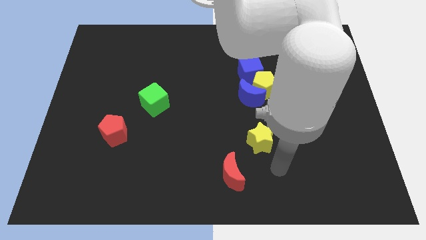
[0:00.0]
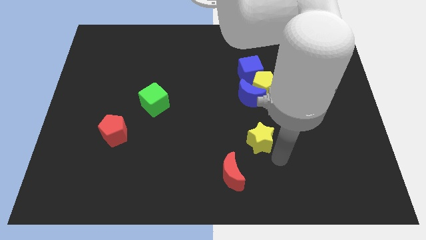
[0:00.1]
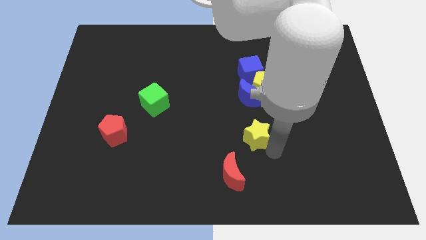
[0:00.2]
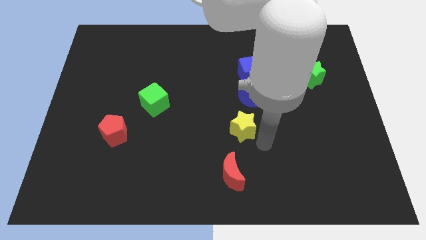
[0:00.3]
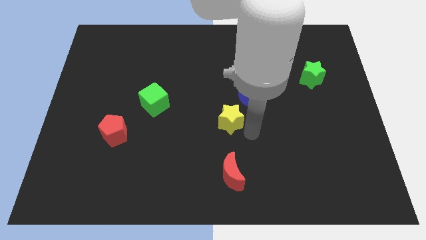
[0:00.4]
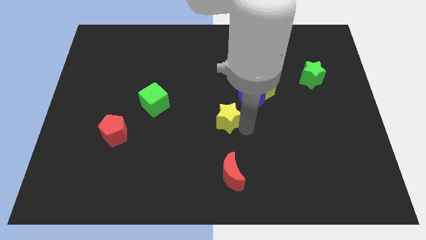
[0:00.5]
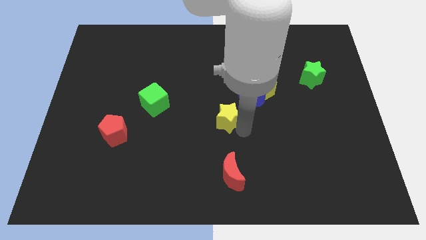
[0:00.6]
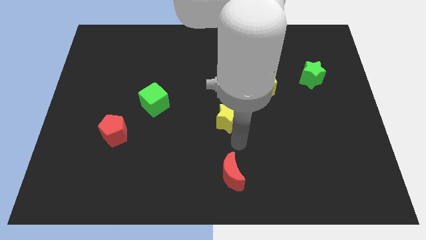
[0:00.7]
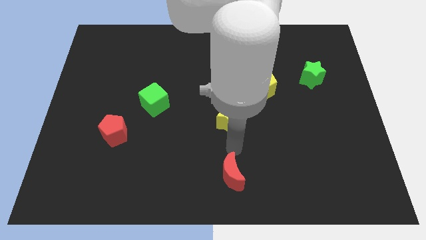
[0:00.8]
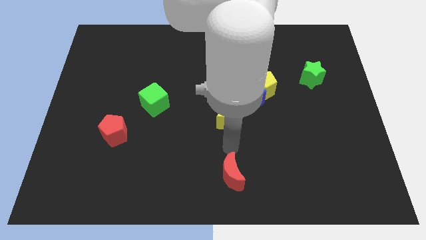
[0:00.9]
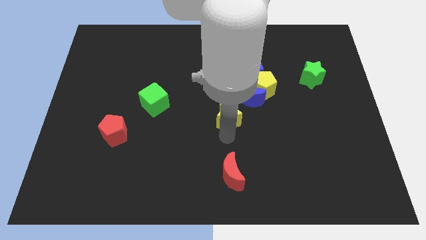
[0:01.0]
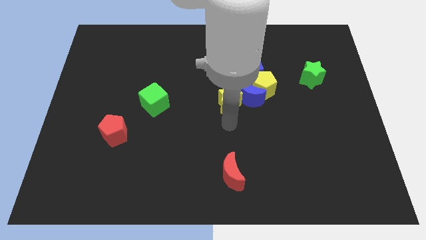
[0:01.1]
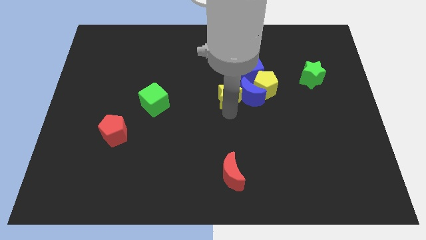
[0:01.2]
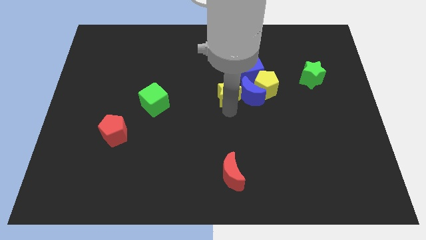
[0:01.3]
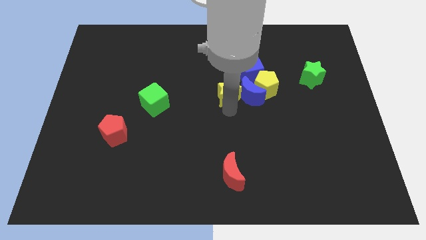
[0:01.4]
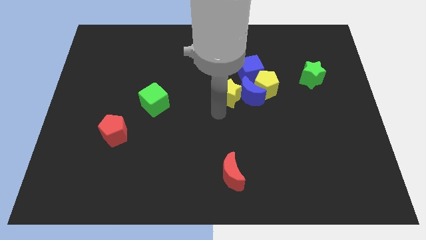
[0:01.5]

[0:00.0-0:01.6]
move the yellow star at the left of the blue moon

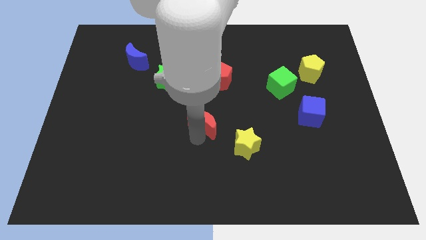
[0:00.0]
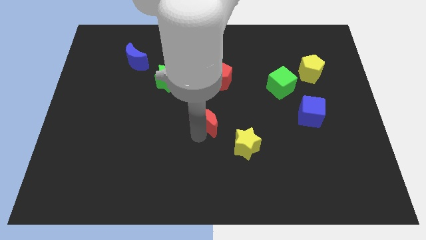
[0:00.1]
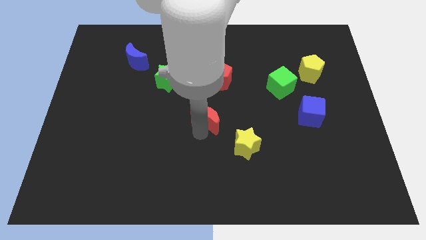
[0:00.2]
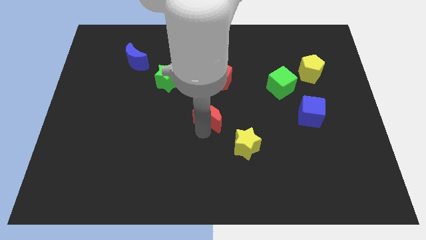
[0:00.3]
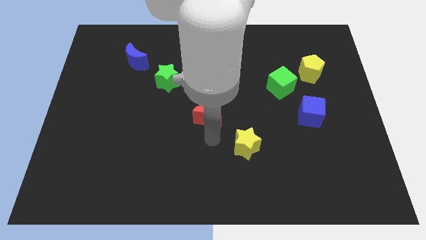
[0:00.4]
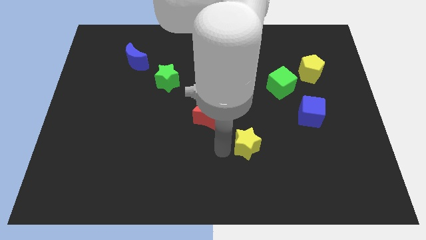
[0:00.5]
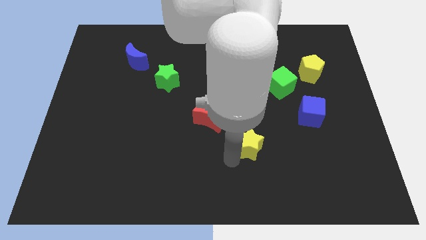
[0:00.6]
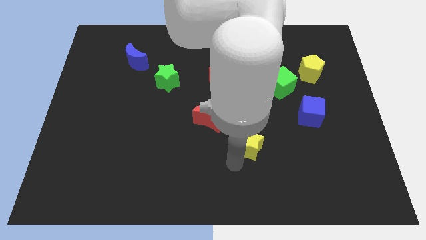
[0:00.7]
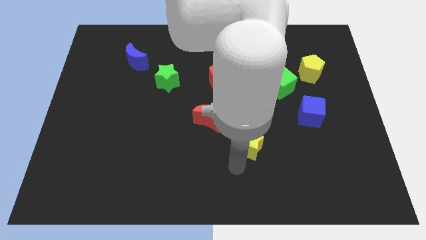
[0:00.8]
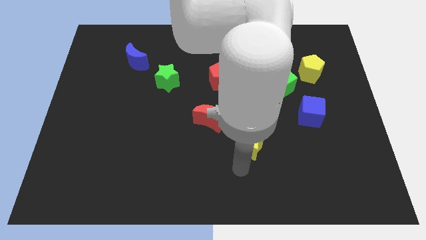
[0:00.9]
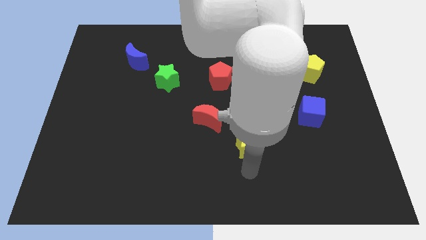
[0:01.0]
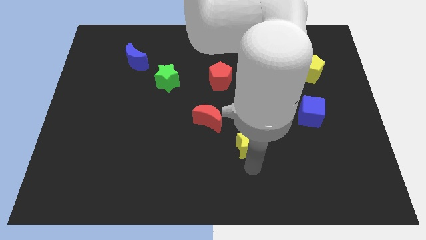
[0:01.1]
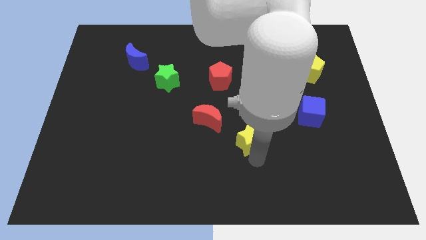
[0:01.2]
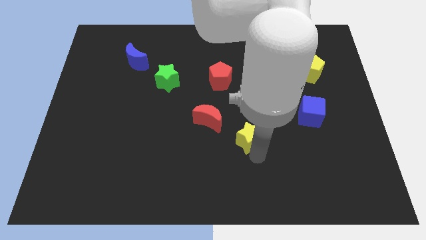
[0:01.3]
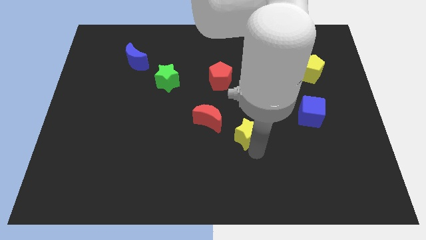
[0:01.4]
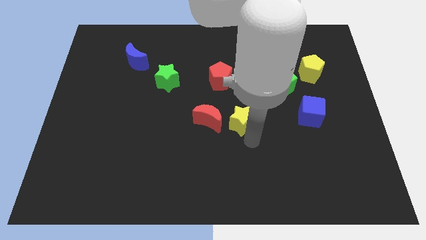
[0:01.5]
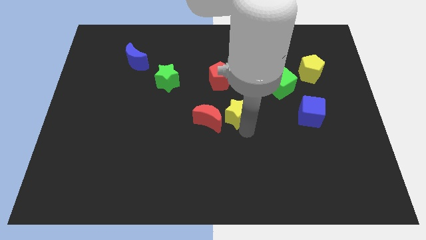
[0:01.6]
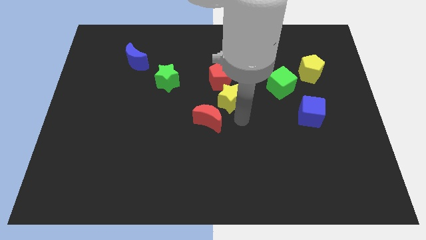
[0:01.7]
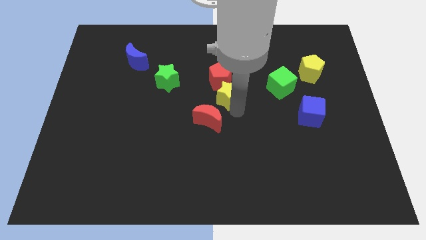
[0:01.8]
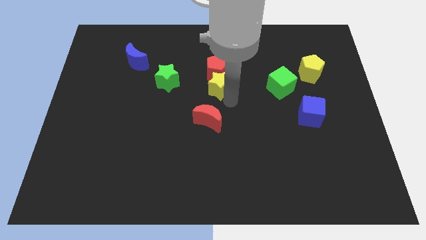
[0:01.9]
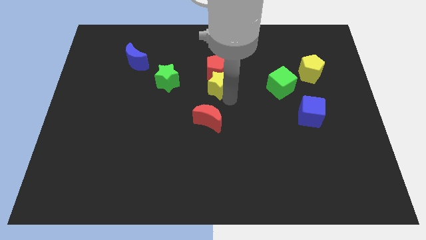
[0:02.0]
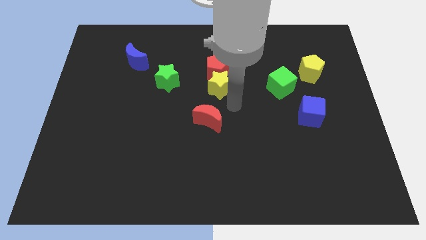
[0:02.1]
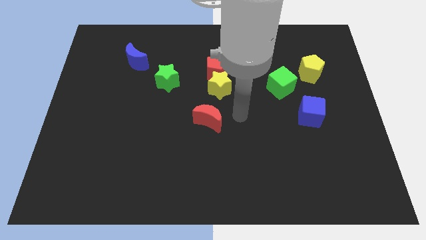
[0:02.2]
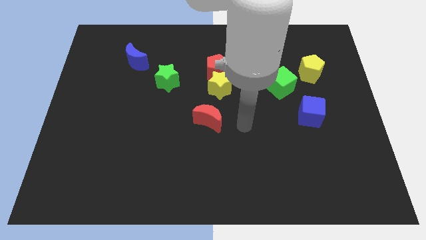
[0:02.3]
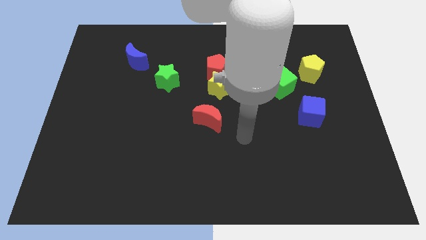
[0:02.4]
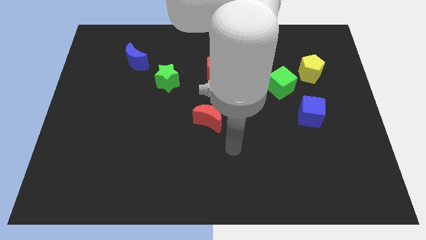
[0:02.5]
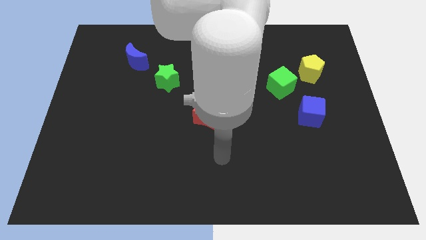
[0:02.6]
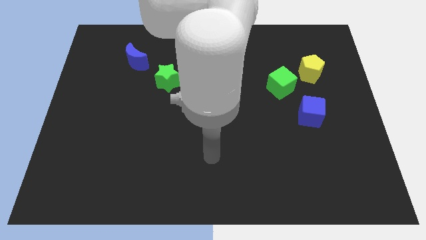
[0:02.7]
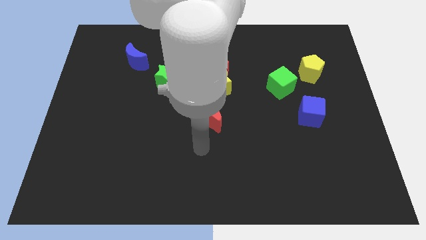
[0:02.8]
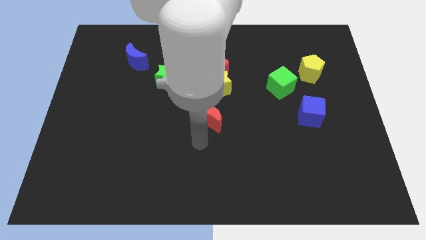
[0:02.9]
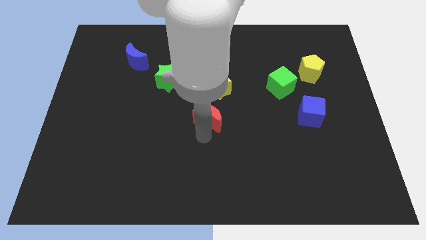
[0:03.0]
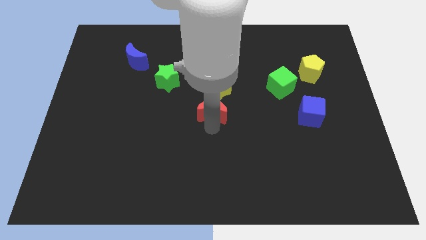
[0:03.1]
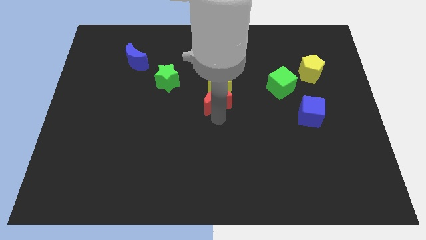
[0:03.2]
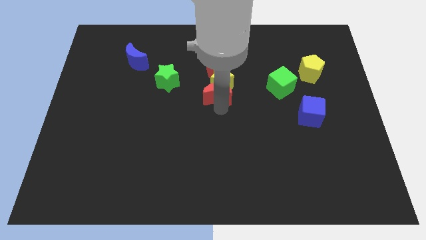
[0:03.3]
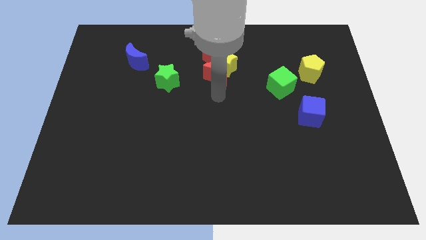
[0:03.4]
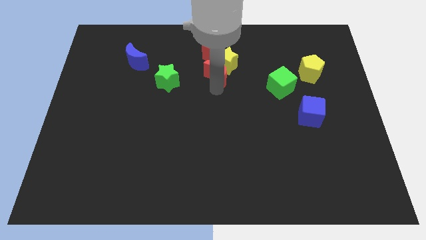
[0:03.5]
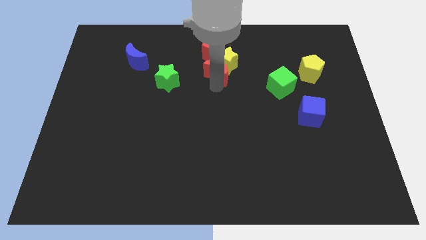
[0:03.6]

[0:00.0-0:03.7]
push the yellow star and both the red blocks towards the top side of the board

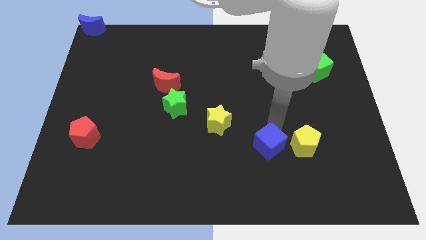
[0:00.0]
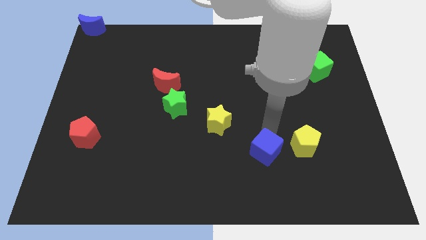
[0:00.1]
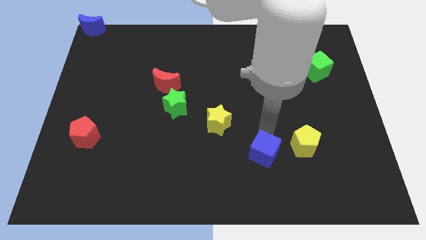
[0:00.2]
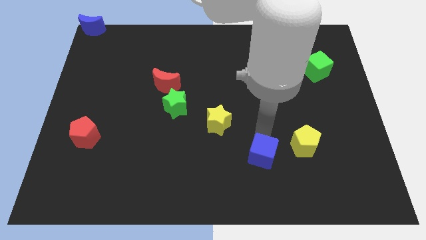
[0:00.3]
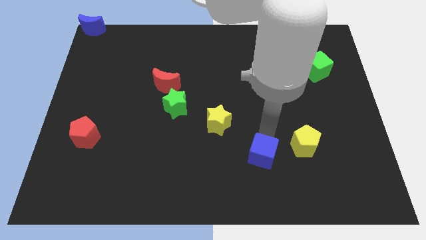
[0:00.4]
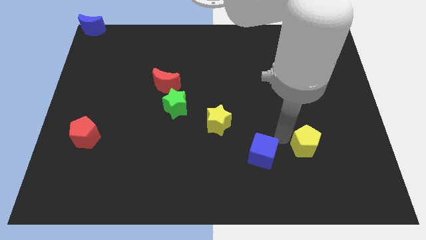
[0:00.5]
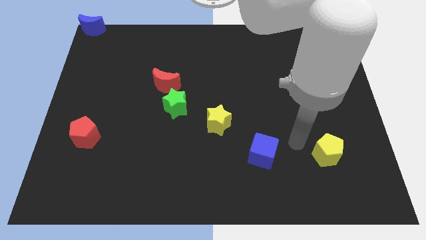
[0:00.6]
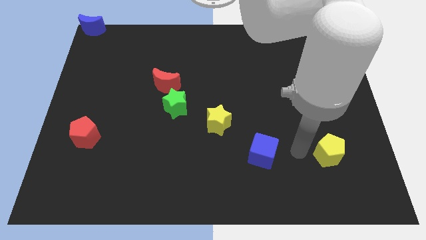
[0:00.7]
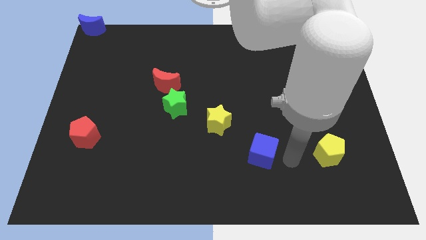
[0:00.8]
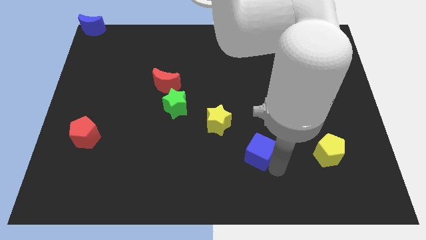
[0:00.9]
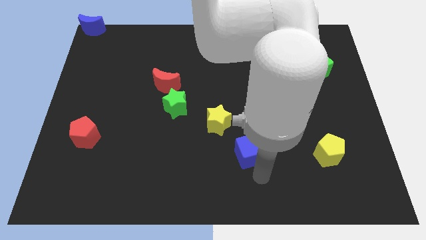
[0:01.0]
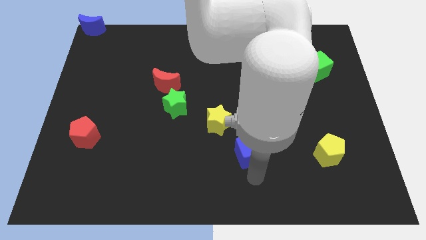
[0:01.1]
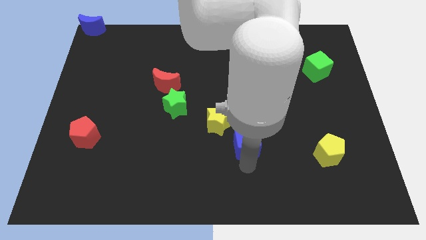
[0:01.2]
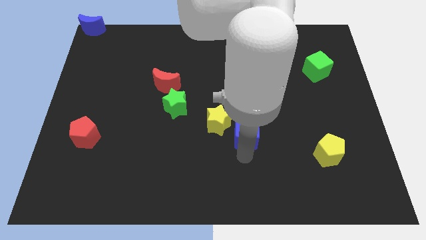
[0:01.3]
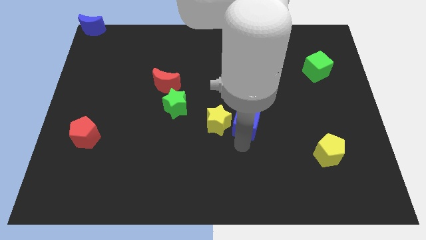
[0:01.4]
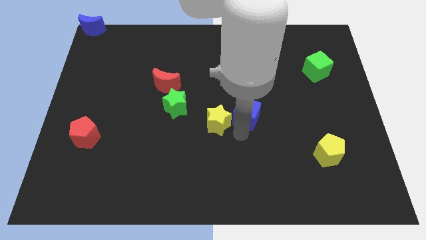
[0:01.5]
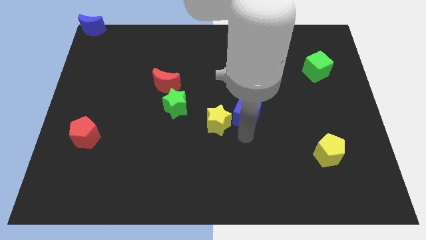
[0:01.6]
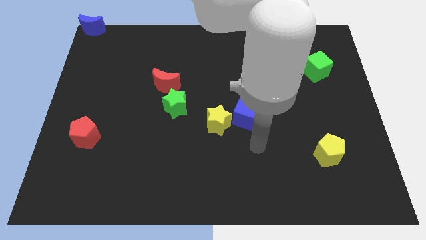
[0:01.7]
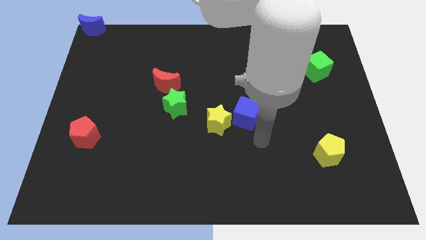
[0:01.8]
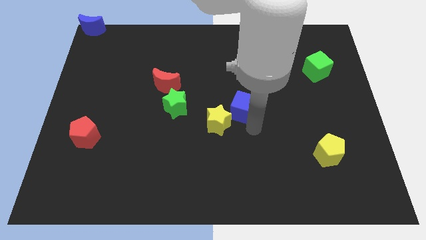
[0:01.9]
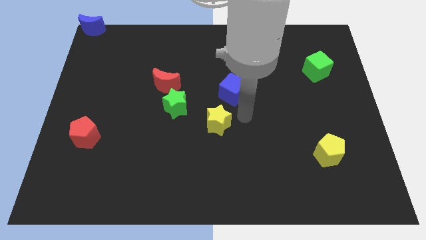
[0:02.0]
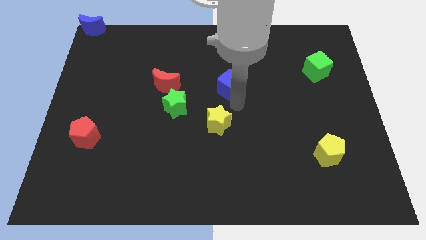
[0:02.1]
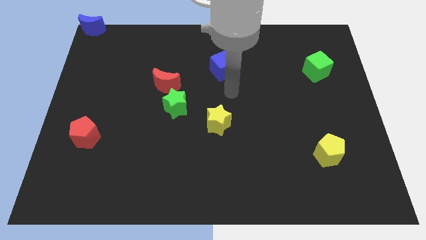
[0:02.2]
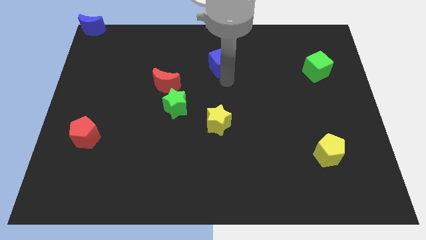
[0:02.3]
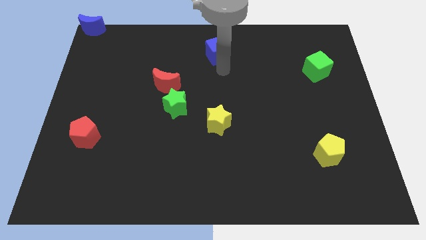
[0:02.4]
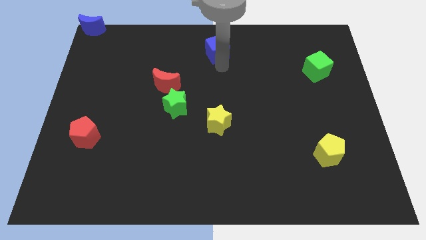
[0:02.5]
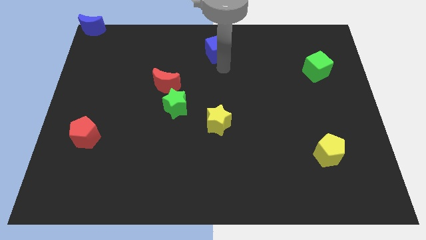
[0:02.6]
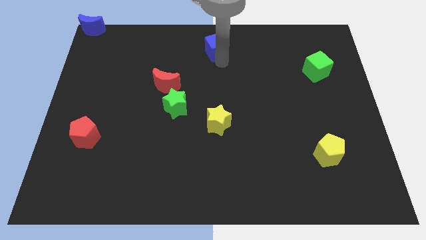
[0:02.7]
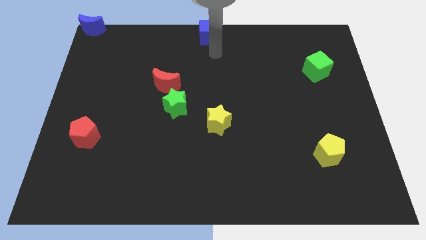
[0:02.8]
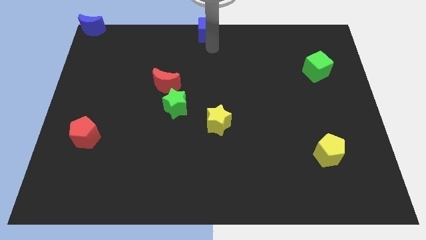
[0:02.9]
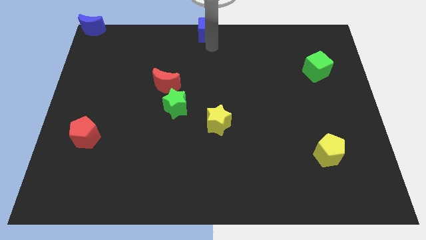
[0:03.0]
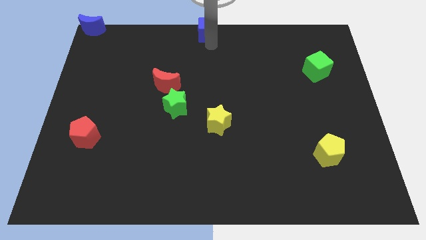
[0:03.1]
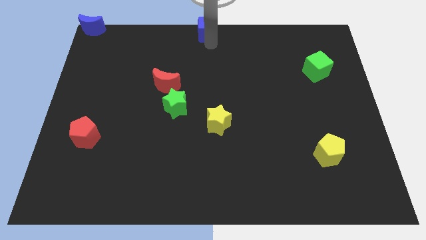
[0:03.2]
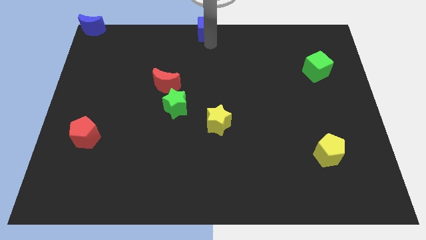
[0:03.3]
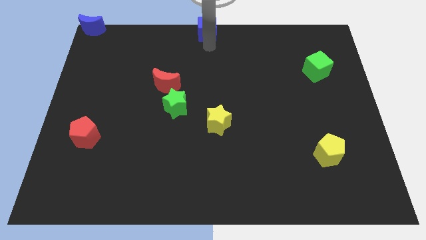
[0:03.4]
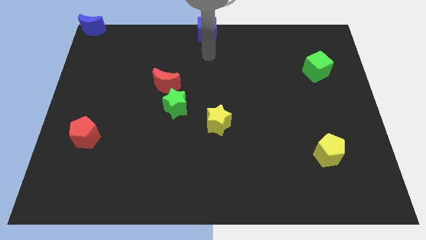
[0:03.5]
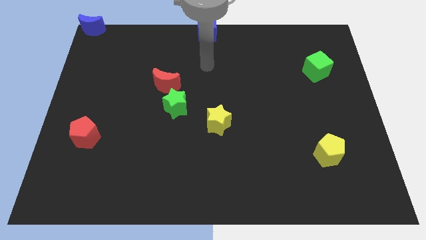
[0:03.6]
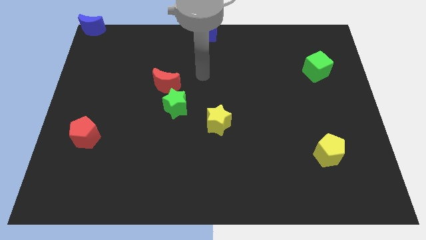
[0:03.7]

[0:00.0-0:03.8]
push the blue cube towards top center of the board

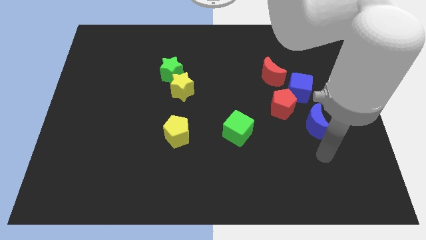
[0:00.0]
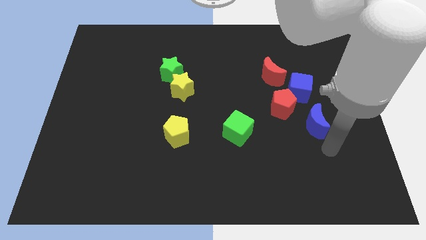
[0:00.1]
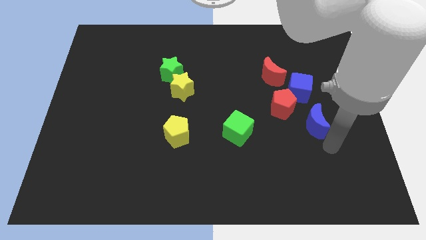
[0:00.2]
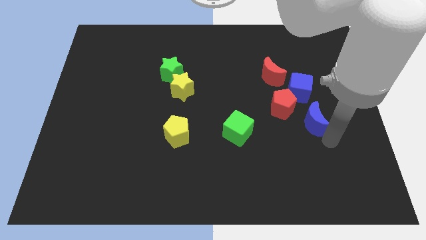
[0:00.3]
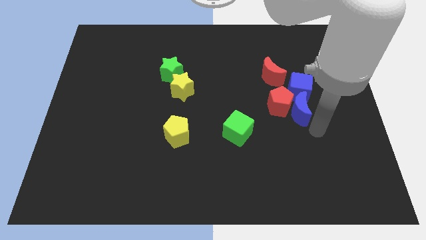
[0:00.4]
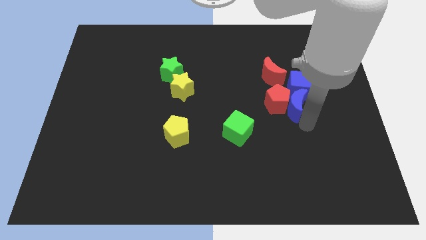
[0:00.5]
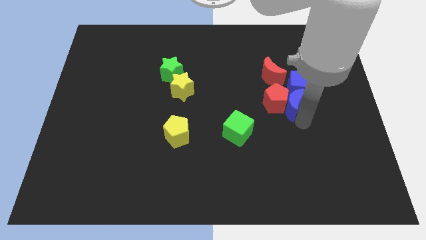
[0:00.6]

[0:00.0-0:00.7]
push the blue crescent into the red pentagon
